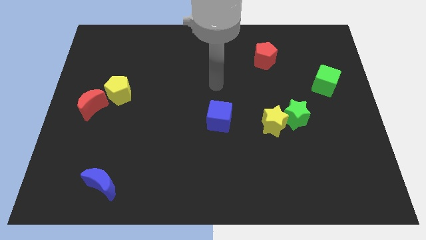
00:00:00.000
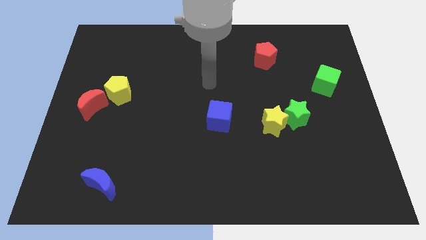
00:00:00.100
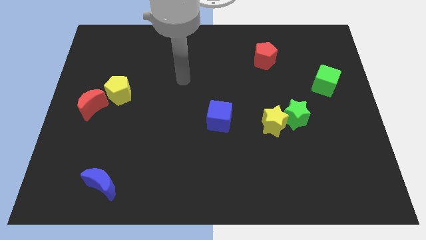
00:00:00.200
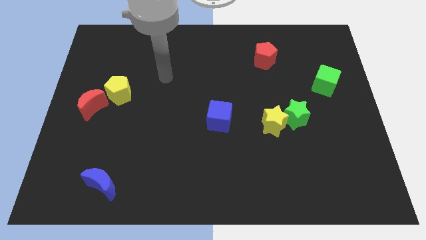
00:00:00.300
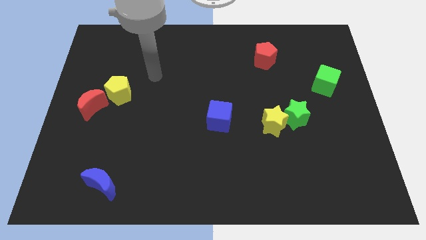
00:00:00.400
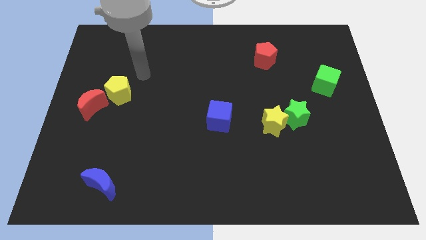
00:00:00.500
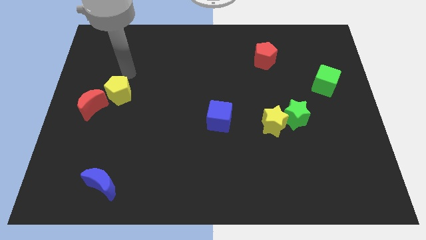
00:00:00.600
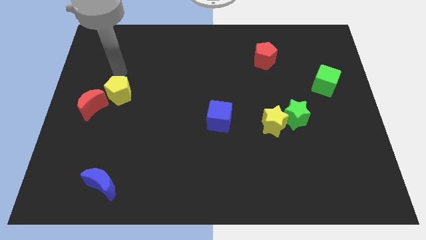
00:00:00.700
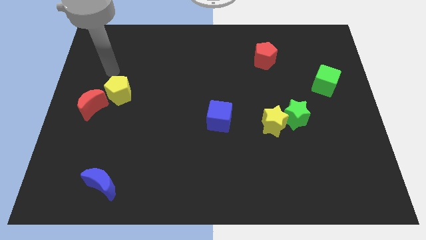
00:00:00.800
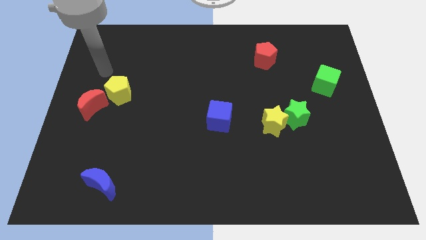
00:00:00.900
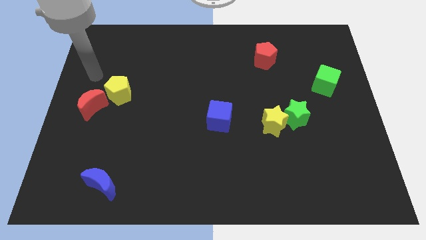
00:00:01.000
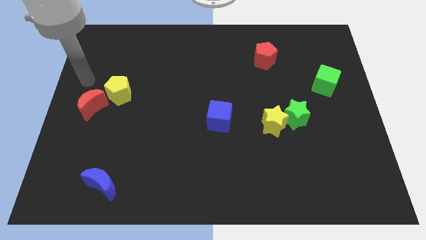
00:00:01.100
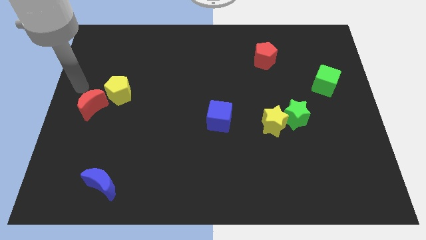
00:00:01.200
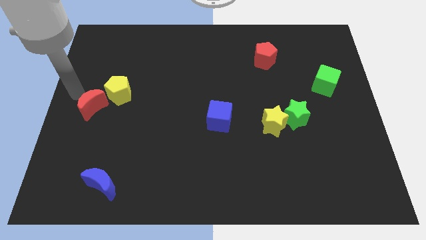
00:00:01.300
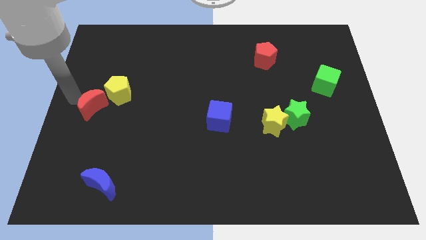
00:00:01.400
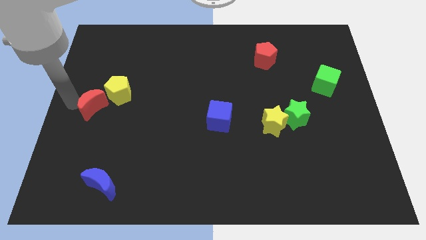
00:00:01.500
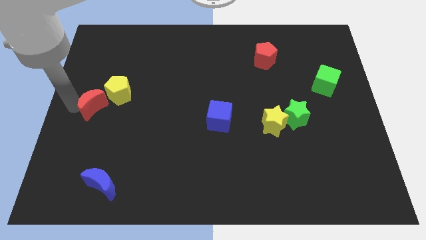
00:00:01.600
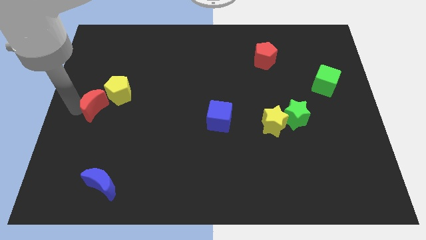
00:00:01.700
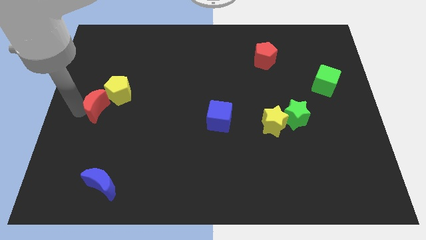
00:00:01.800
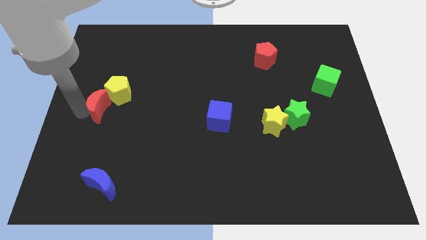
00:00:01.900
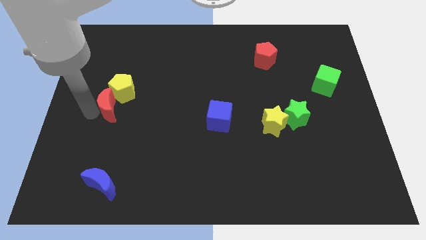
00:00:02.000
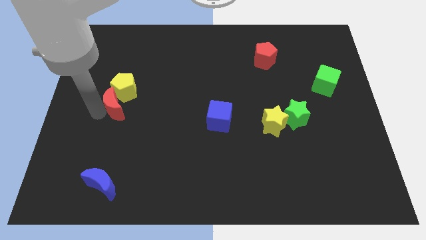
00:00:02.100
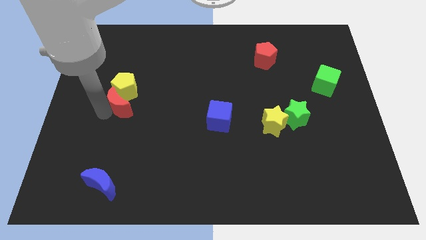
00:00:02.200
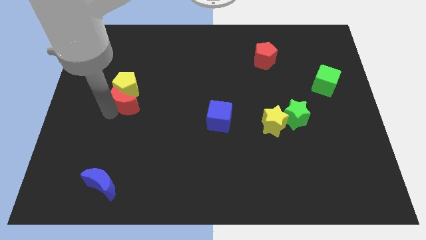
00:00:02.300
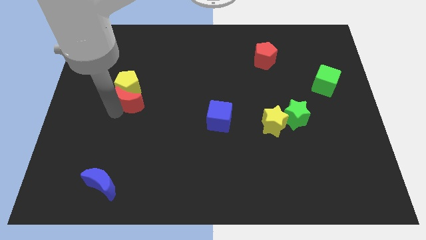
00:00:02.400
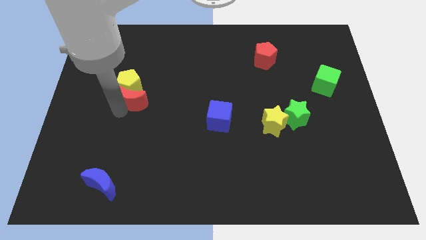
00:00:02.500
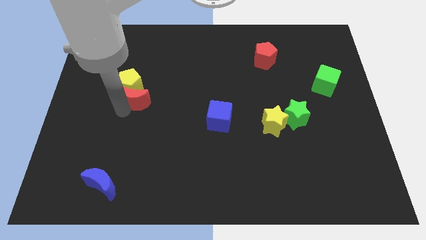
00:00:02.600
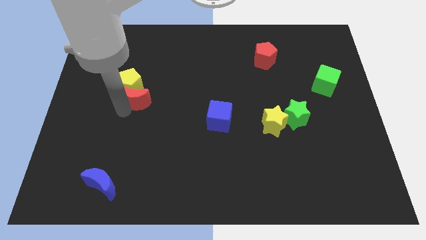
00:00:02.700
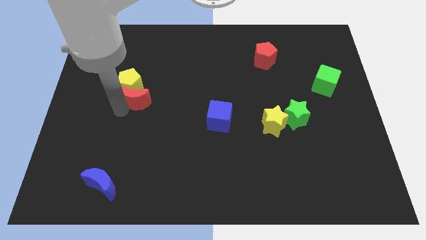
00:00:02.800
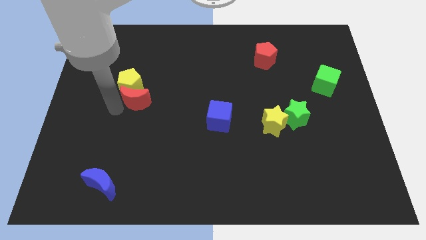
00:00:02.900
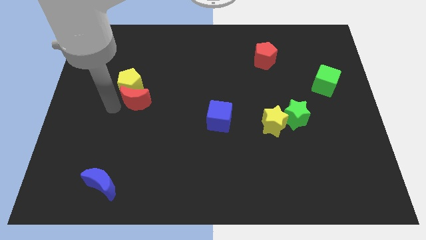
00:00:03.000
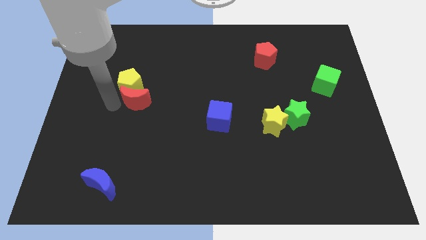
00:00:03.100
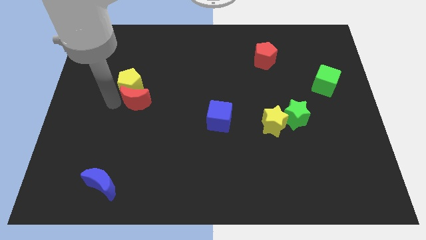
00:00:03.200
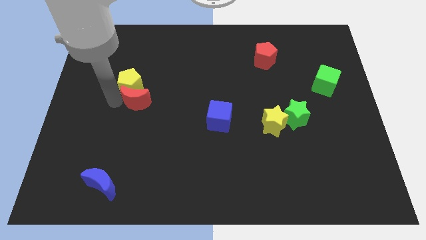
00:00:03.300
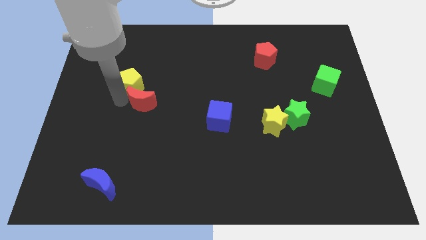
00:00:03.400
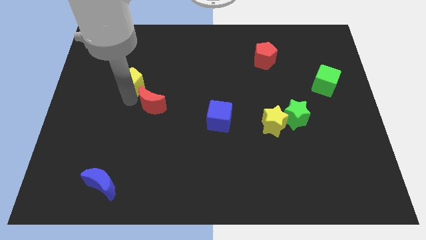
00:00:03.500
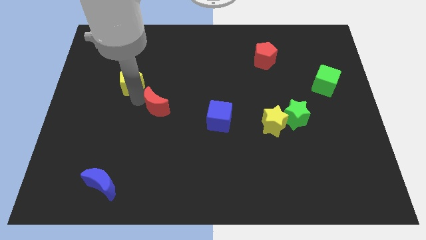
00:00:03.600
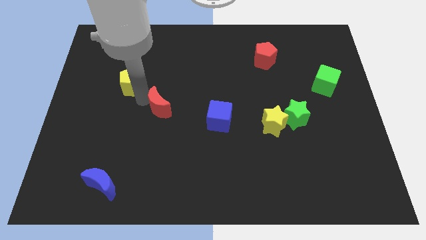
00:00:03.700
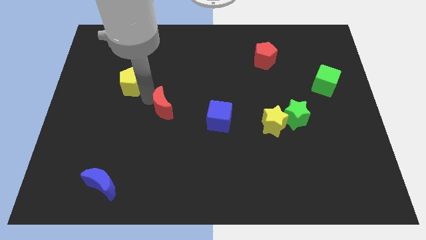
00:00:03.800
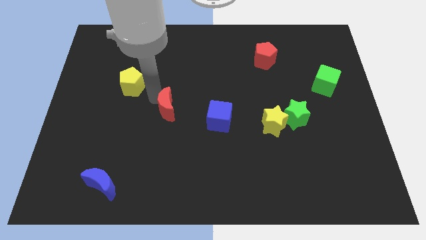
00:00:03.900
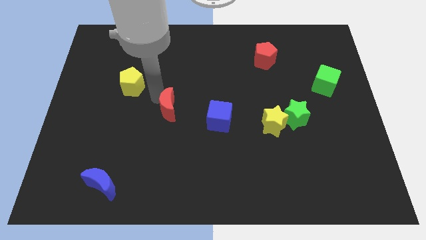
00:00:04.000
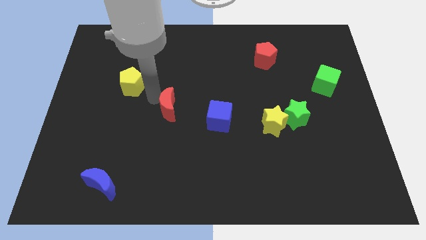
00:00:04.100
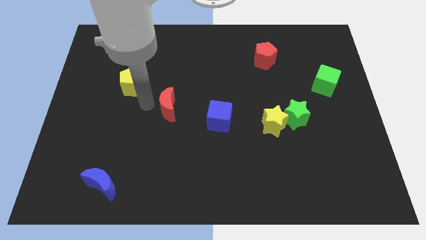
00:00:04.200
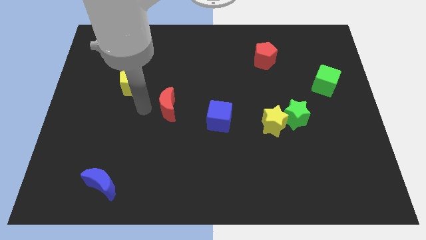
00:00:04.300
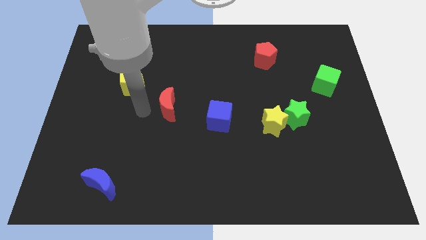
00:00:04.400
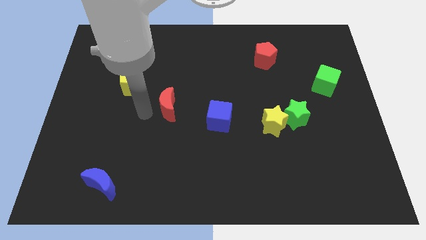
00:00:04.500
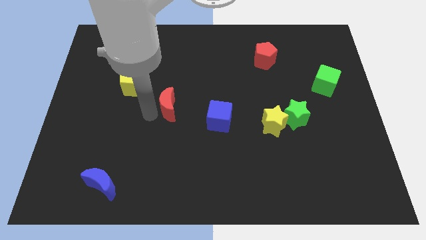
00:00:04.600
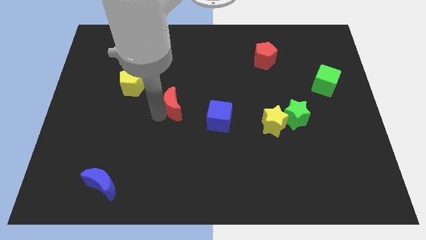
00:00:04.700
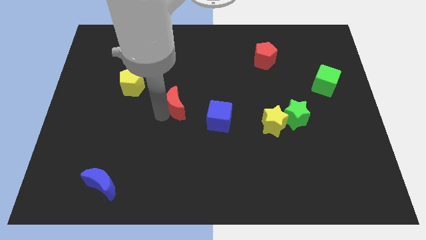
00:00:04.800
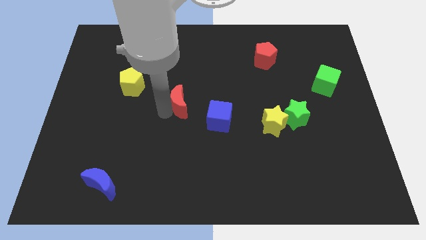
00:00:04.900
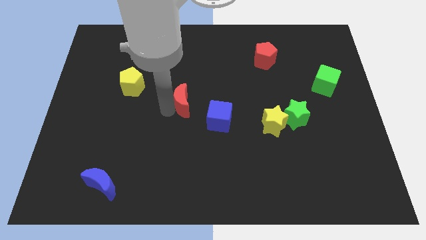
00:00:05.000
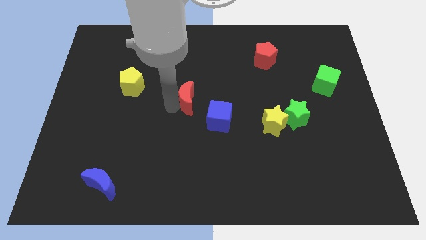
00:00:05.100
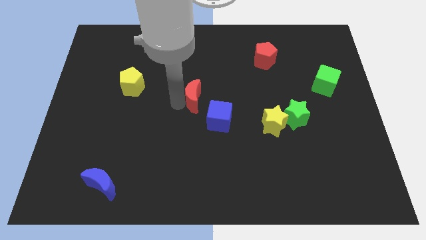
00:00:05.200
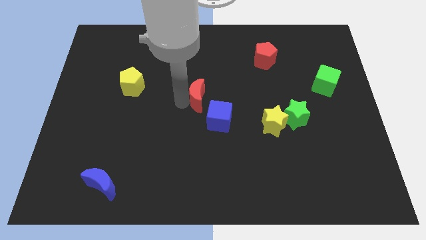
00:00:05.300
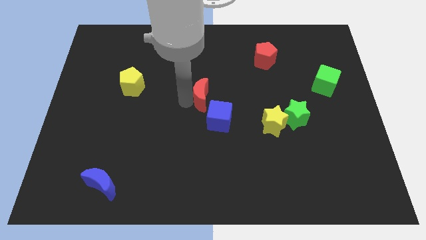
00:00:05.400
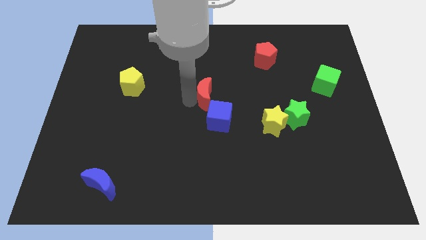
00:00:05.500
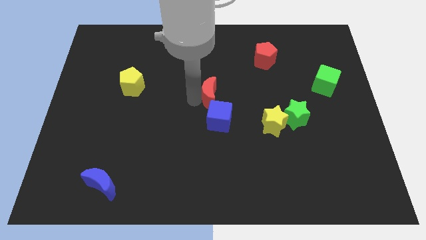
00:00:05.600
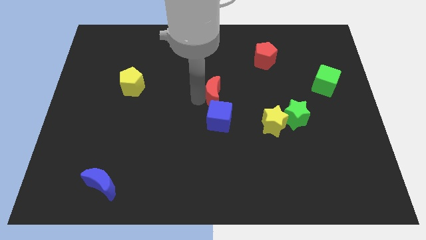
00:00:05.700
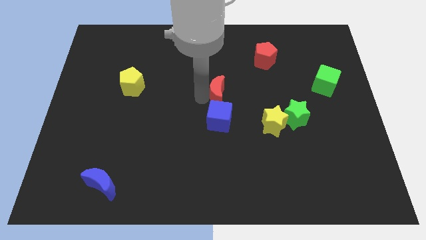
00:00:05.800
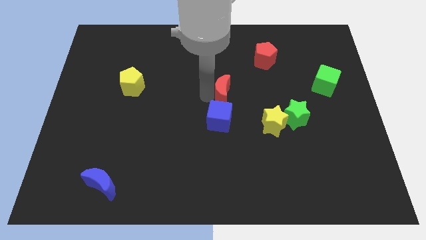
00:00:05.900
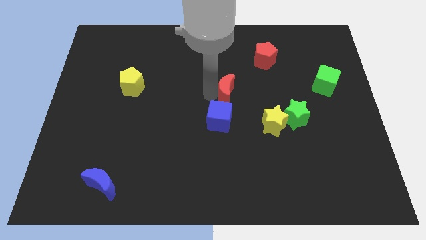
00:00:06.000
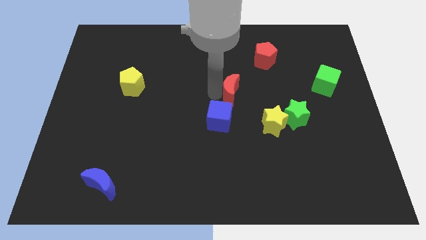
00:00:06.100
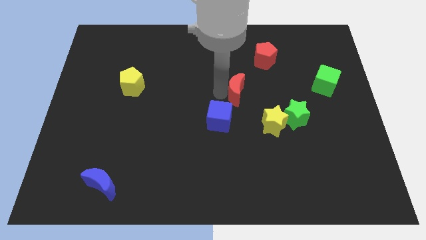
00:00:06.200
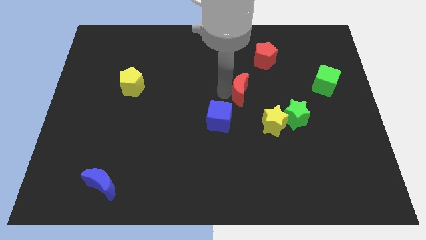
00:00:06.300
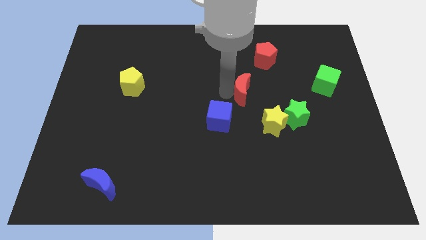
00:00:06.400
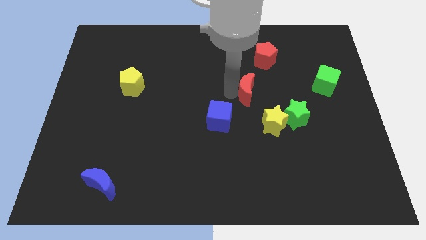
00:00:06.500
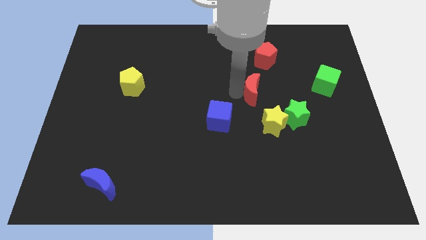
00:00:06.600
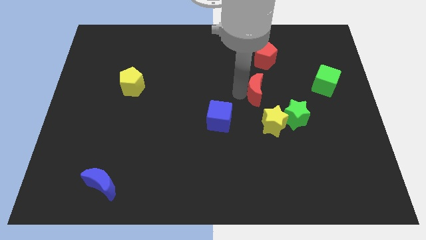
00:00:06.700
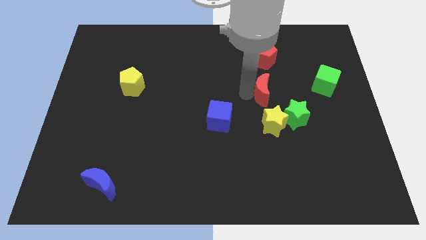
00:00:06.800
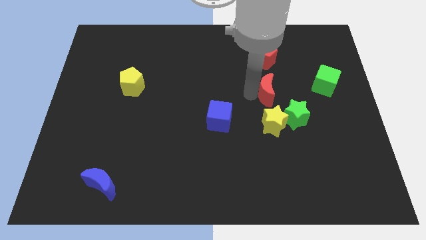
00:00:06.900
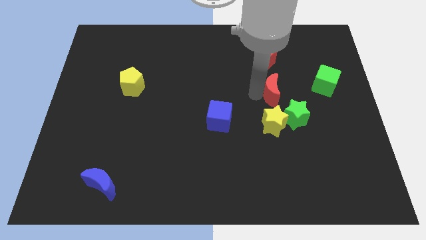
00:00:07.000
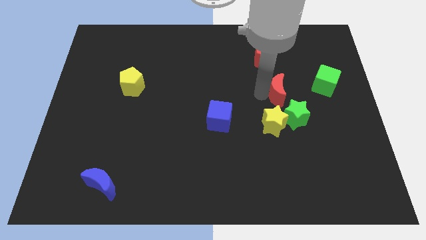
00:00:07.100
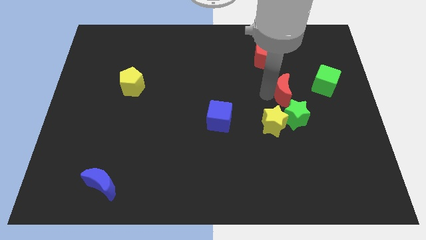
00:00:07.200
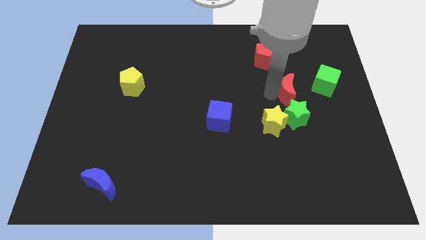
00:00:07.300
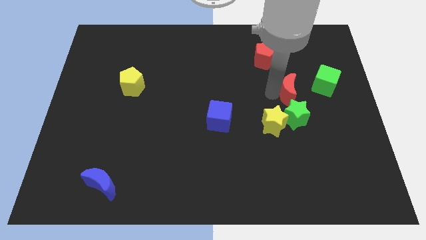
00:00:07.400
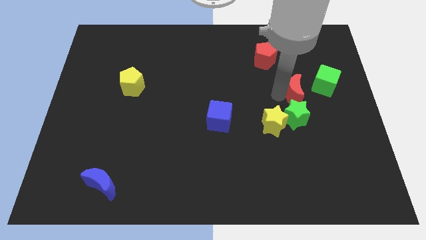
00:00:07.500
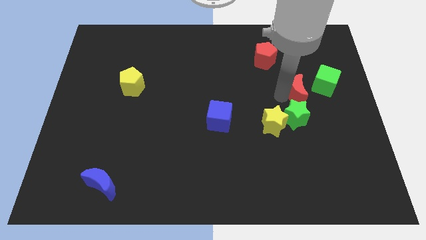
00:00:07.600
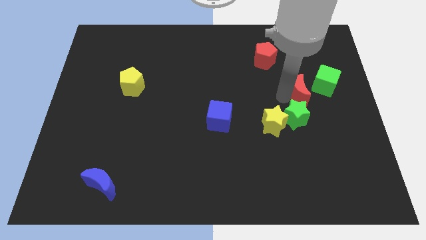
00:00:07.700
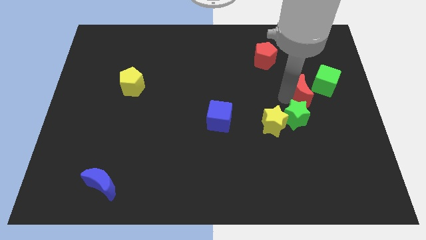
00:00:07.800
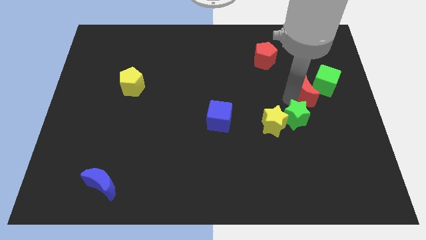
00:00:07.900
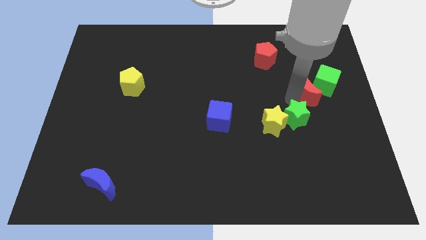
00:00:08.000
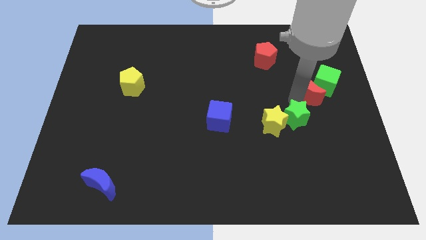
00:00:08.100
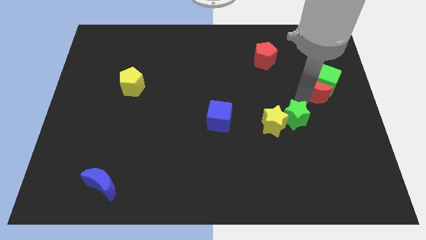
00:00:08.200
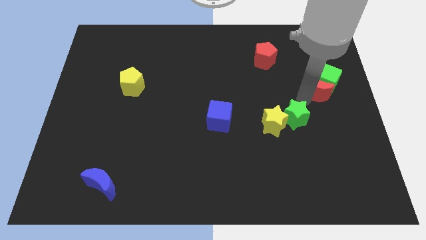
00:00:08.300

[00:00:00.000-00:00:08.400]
move the red moon towards the green cube
